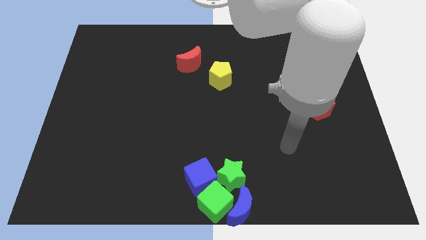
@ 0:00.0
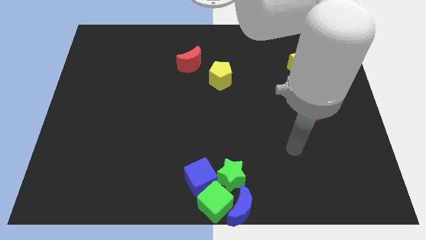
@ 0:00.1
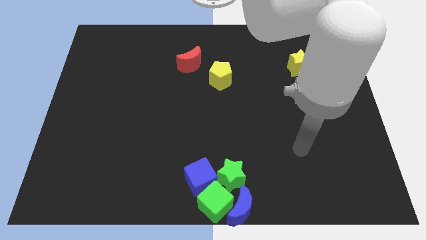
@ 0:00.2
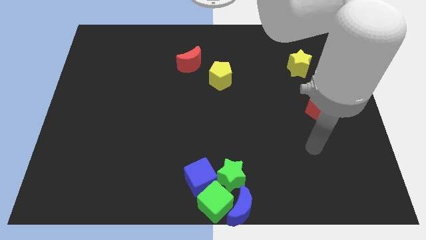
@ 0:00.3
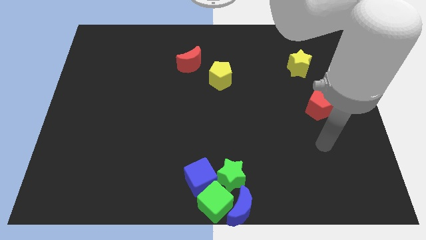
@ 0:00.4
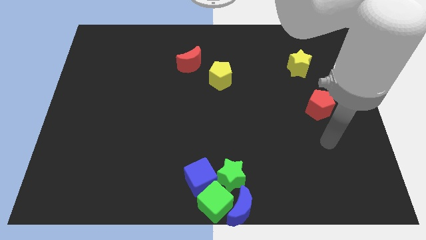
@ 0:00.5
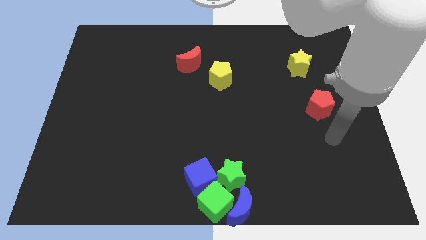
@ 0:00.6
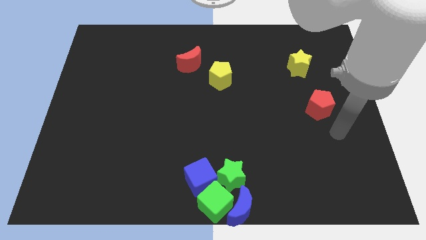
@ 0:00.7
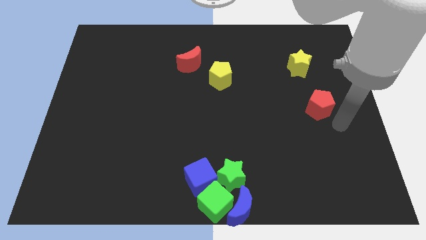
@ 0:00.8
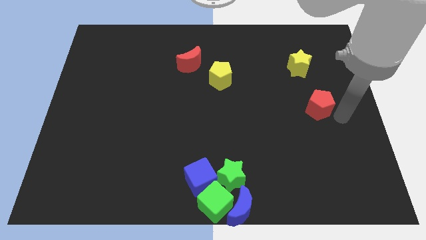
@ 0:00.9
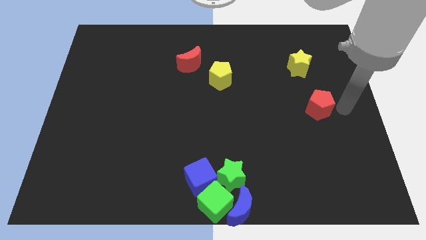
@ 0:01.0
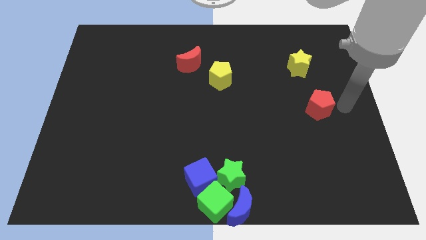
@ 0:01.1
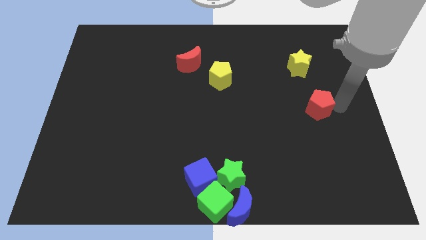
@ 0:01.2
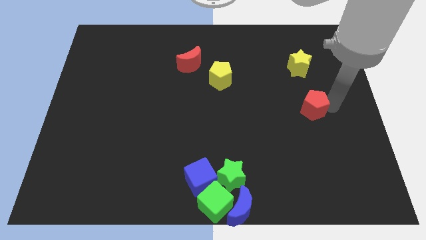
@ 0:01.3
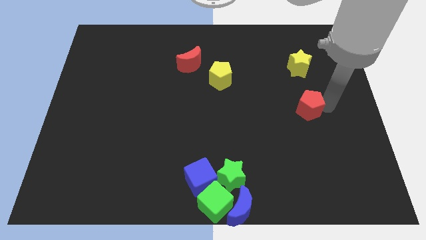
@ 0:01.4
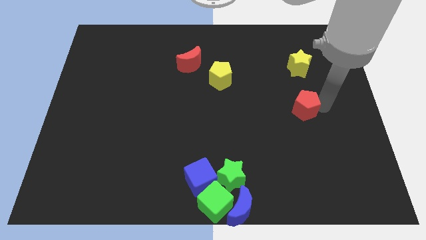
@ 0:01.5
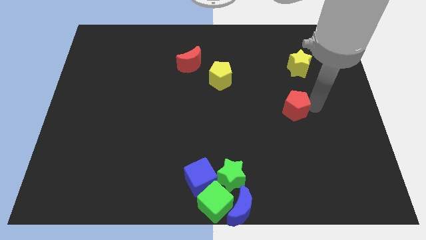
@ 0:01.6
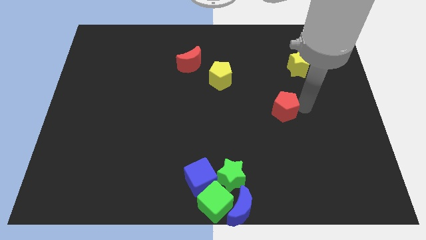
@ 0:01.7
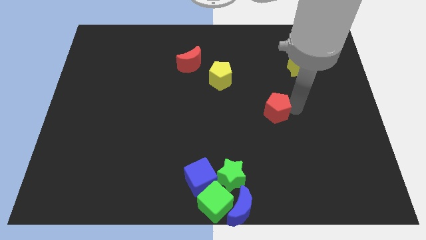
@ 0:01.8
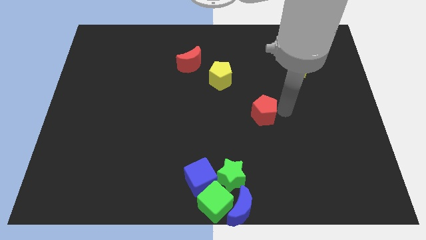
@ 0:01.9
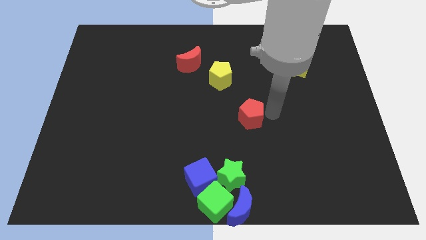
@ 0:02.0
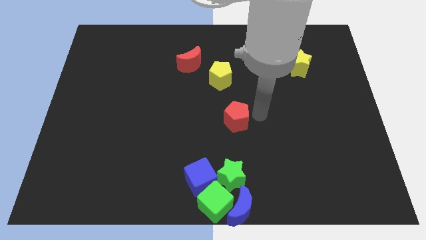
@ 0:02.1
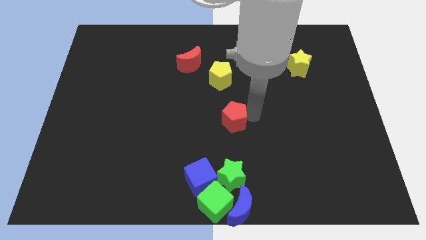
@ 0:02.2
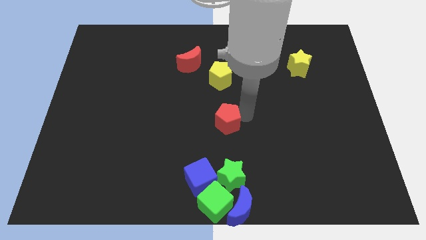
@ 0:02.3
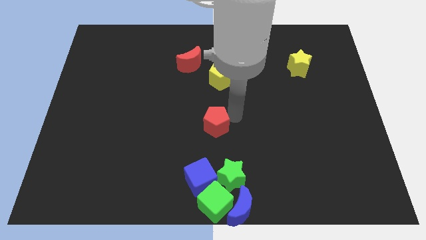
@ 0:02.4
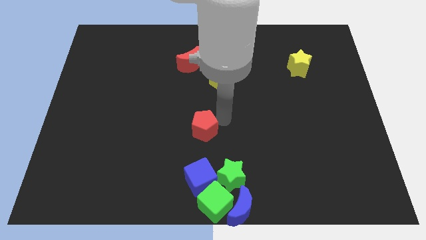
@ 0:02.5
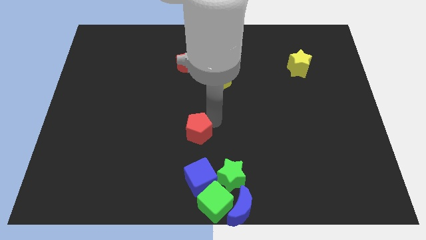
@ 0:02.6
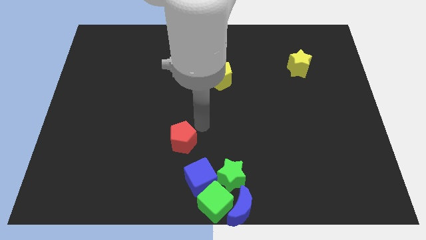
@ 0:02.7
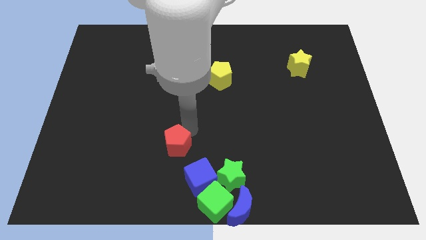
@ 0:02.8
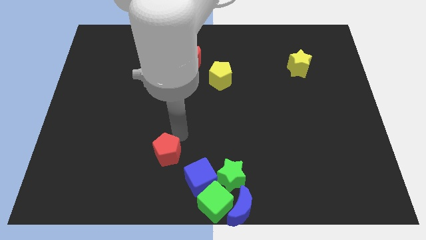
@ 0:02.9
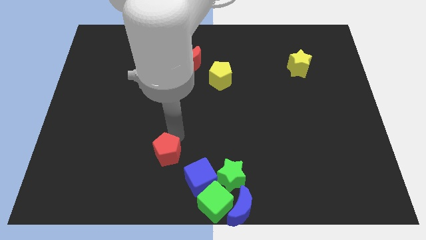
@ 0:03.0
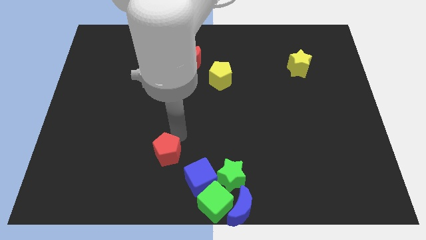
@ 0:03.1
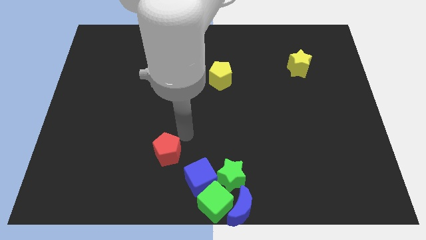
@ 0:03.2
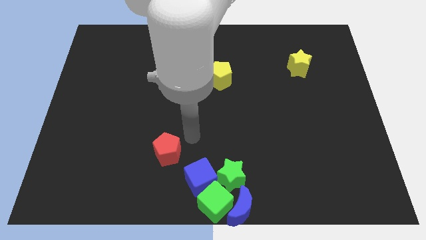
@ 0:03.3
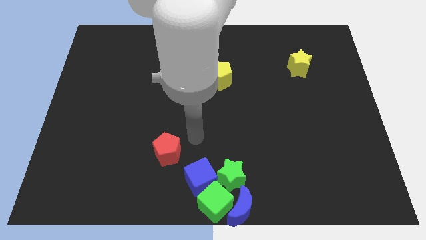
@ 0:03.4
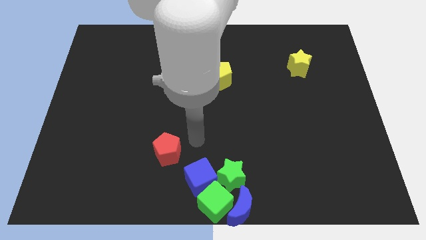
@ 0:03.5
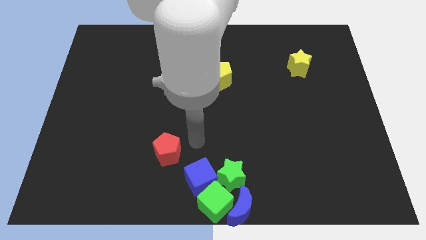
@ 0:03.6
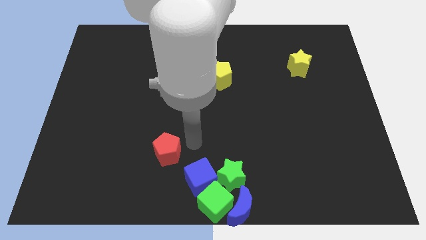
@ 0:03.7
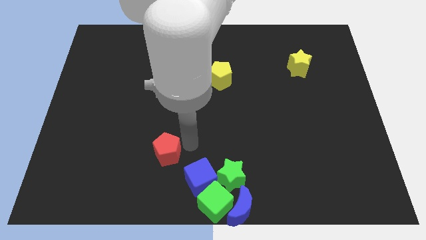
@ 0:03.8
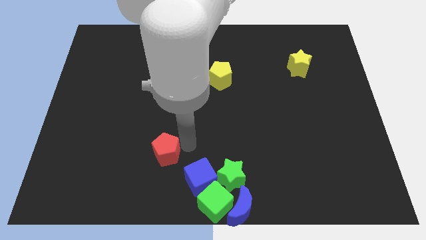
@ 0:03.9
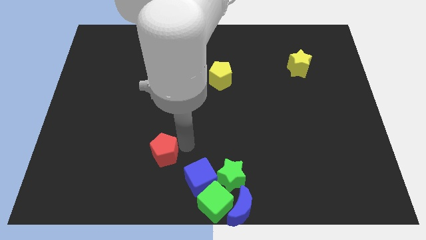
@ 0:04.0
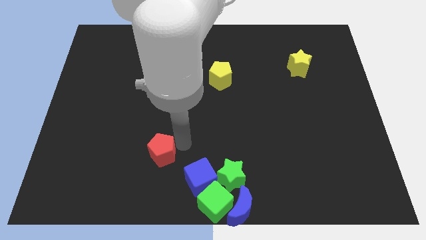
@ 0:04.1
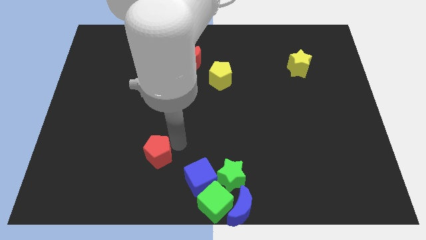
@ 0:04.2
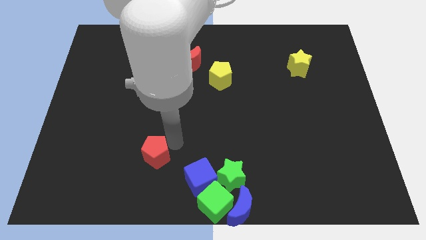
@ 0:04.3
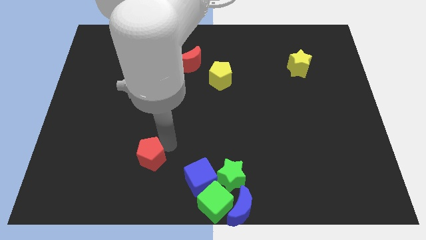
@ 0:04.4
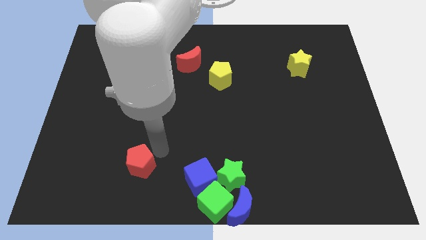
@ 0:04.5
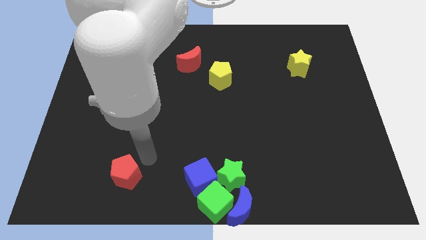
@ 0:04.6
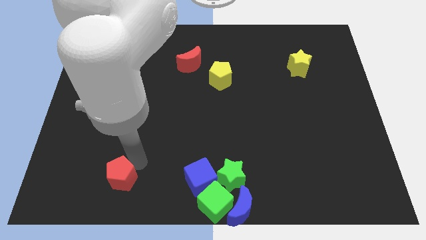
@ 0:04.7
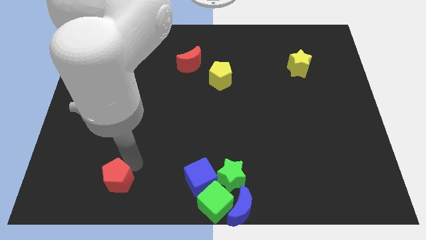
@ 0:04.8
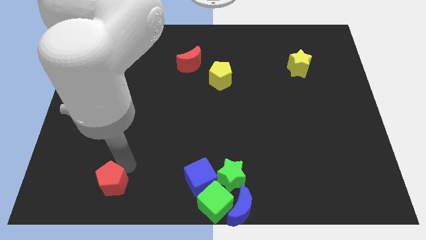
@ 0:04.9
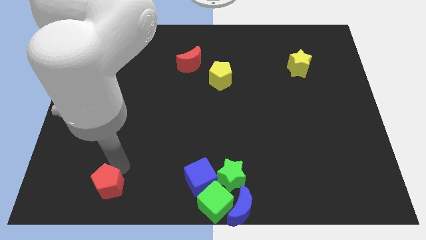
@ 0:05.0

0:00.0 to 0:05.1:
slide red pentagon to the left of blue cube

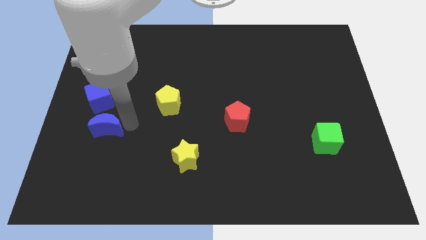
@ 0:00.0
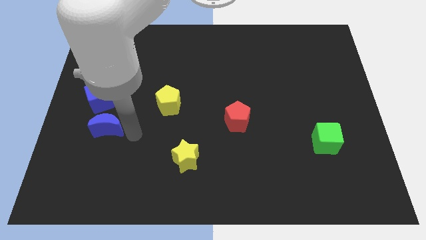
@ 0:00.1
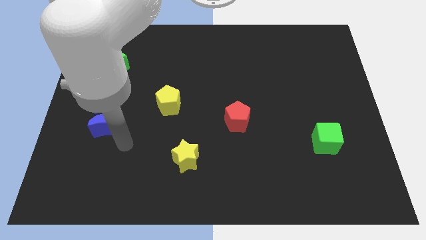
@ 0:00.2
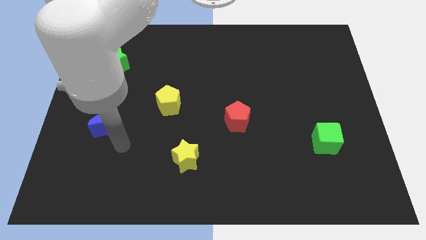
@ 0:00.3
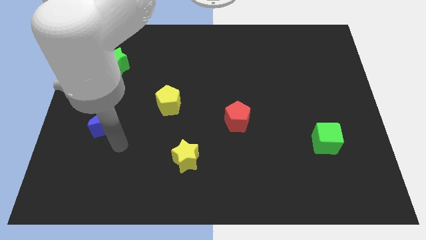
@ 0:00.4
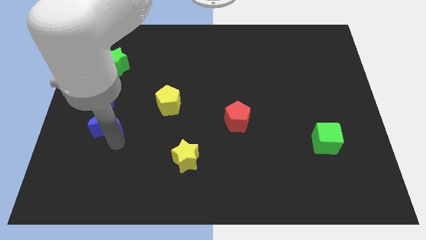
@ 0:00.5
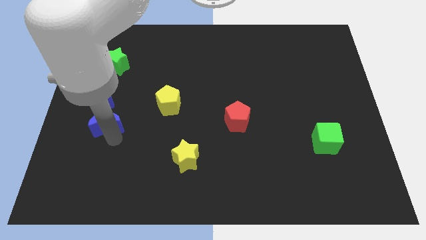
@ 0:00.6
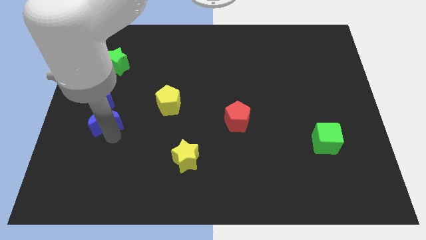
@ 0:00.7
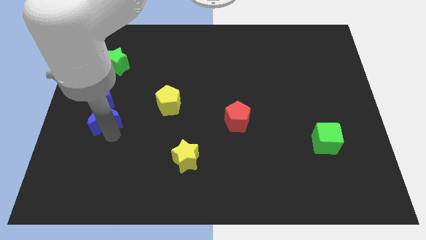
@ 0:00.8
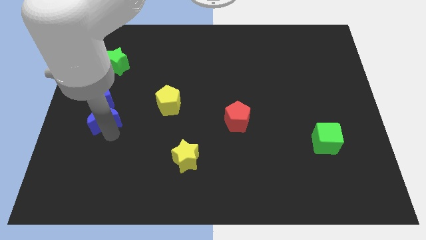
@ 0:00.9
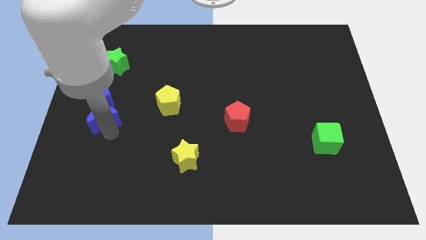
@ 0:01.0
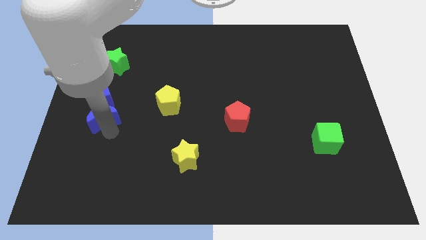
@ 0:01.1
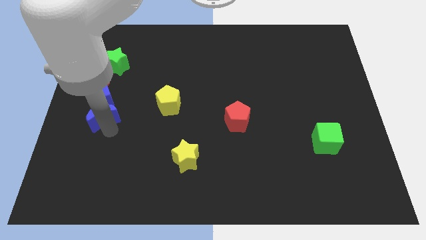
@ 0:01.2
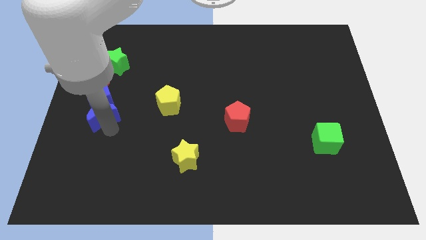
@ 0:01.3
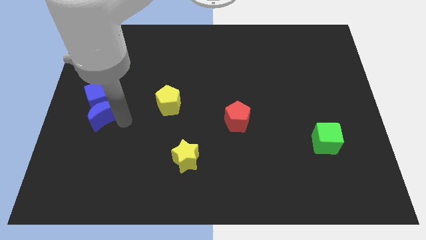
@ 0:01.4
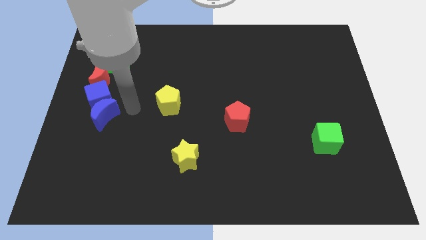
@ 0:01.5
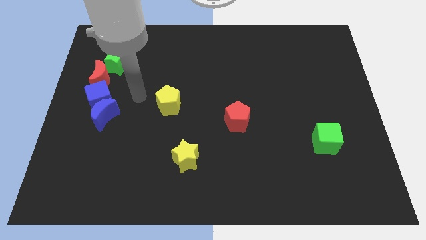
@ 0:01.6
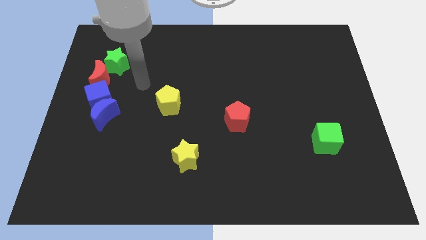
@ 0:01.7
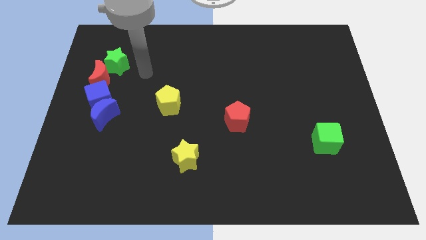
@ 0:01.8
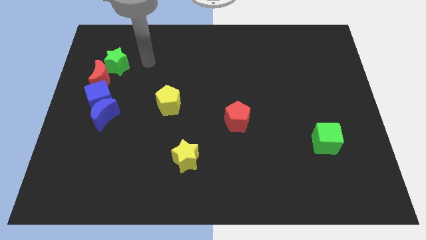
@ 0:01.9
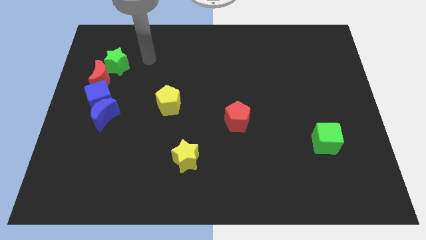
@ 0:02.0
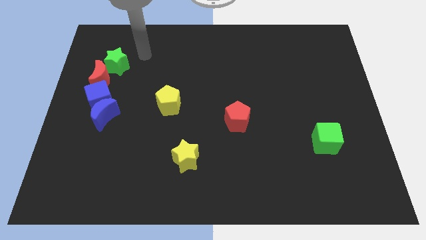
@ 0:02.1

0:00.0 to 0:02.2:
move the blue moon into the blue cube

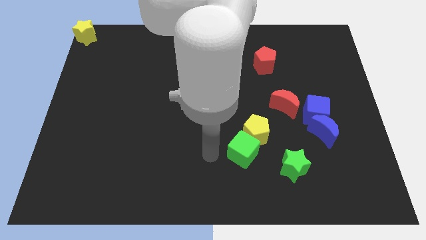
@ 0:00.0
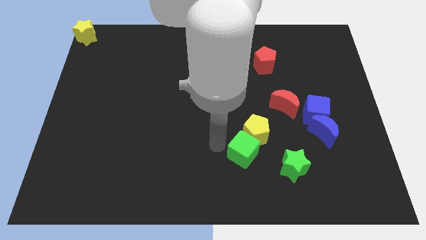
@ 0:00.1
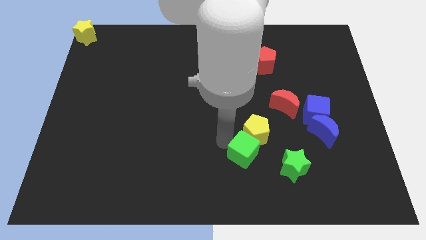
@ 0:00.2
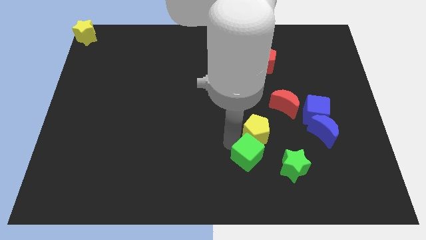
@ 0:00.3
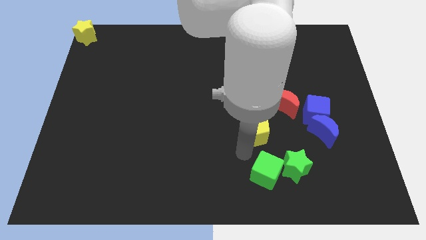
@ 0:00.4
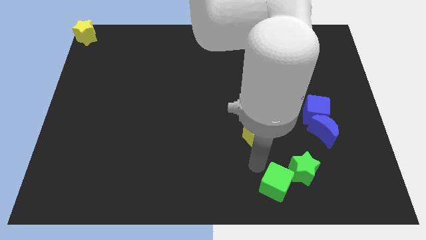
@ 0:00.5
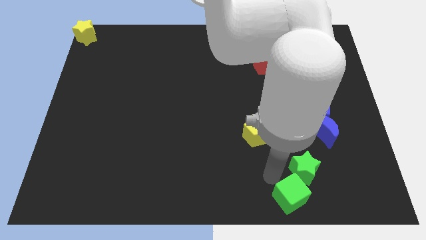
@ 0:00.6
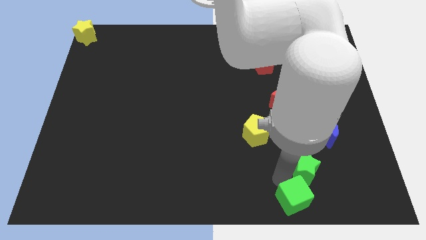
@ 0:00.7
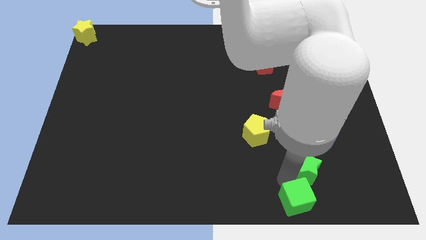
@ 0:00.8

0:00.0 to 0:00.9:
put the green cube at the bottom of the green star

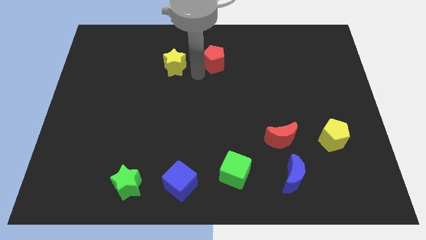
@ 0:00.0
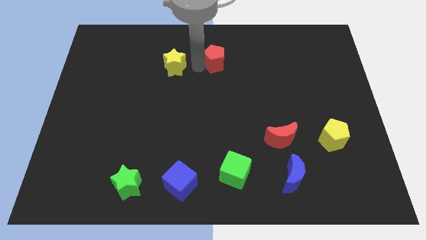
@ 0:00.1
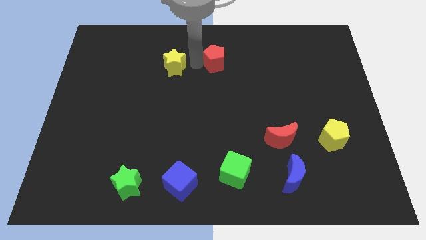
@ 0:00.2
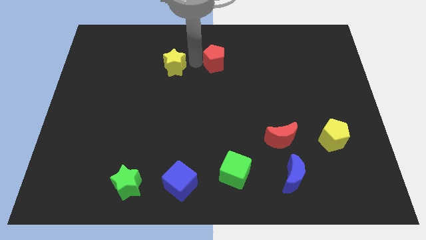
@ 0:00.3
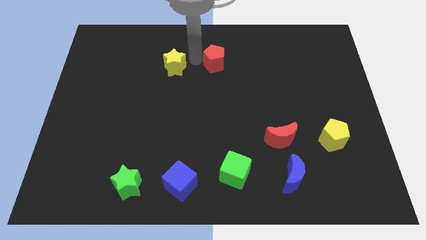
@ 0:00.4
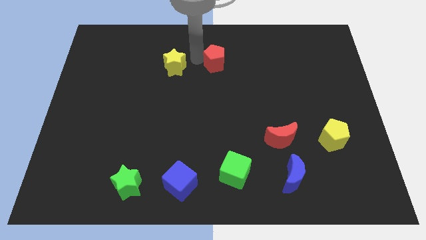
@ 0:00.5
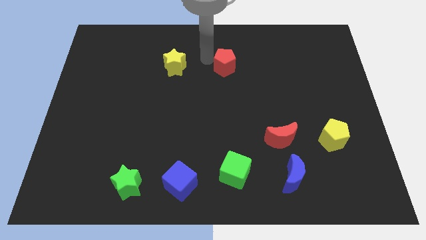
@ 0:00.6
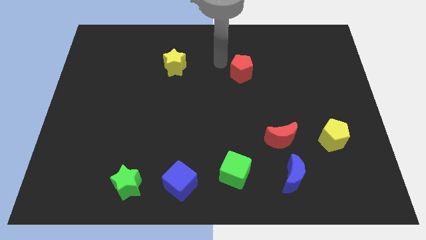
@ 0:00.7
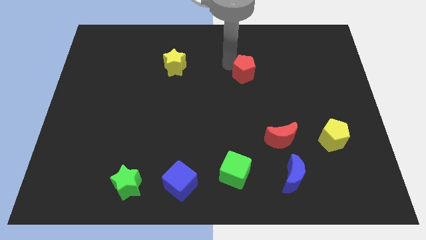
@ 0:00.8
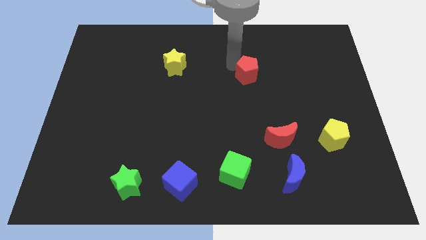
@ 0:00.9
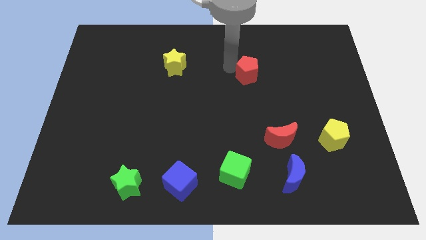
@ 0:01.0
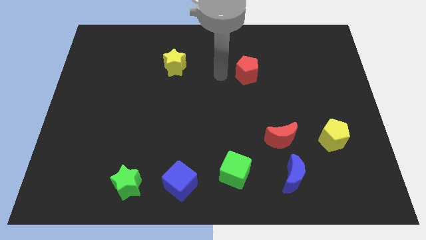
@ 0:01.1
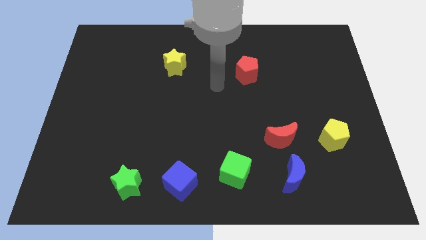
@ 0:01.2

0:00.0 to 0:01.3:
move the red pentagon towards the top of the red crescent
